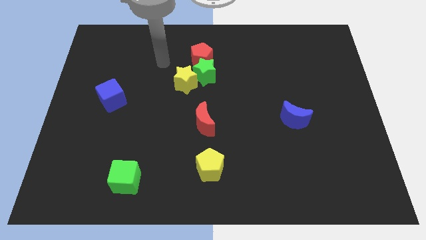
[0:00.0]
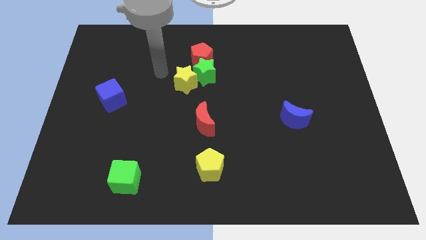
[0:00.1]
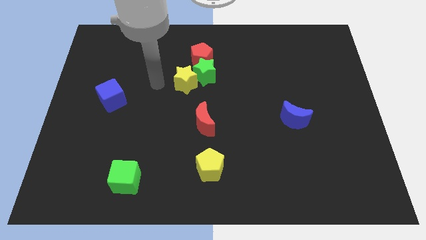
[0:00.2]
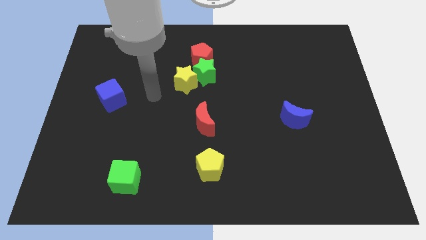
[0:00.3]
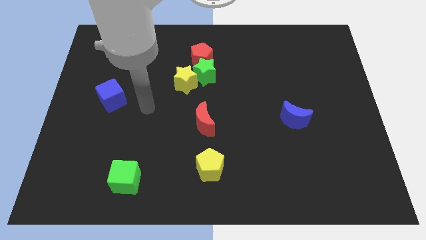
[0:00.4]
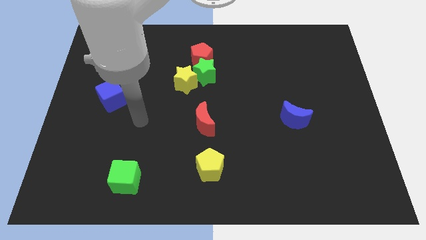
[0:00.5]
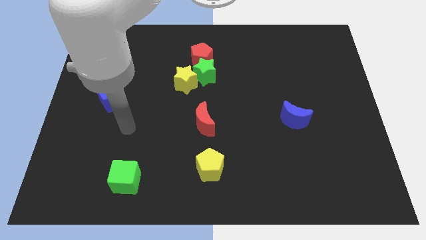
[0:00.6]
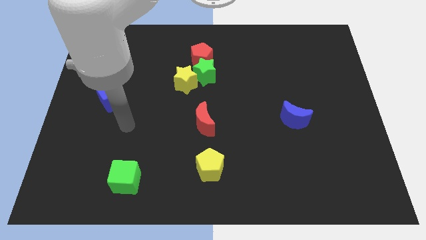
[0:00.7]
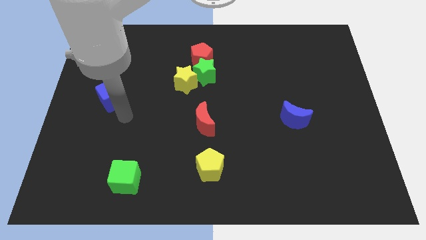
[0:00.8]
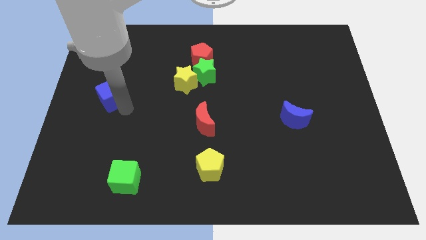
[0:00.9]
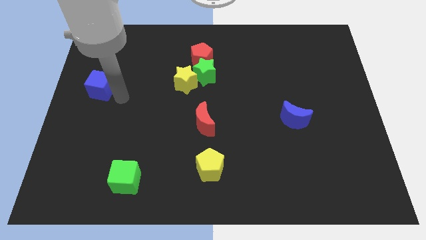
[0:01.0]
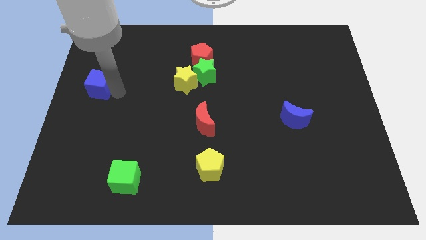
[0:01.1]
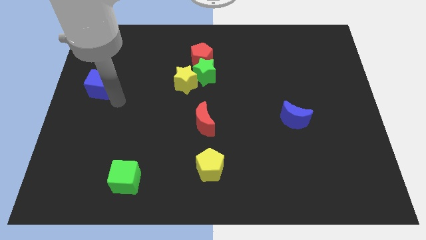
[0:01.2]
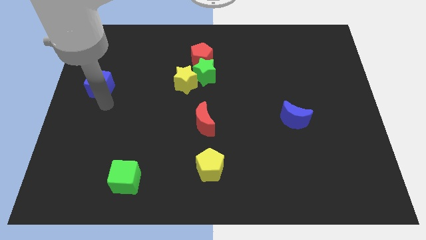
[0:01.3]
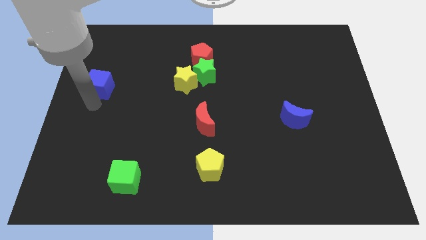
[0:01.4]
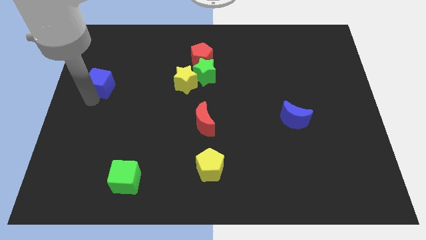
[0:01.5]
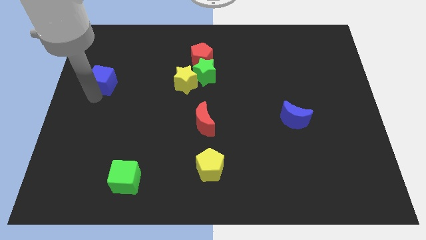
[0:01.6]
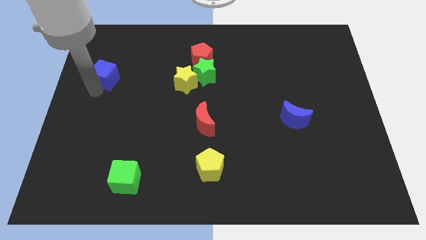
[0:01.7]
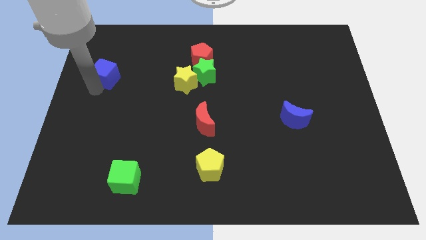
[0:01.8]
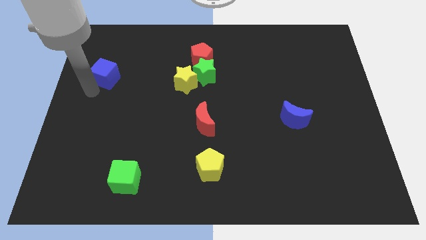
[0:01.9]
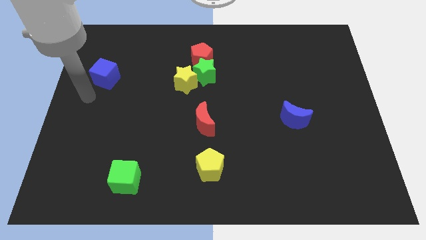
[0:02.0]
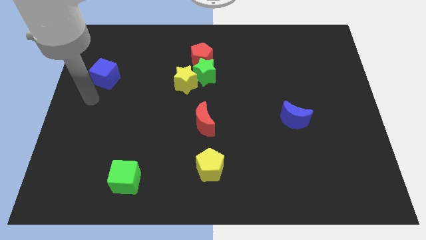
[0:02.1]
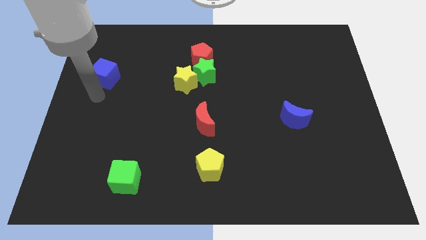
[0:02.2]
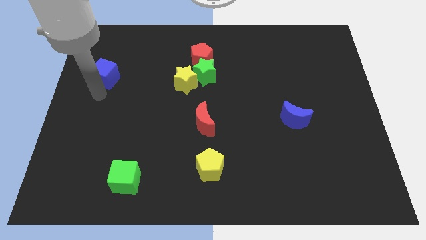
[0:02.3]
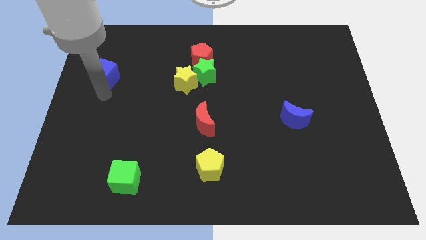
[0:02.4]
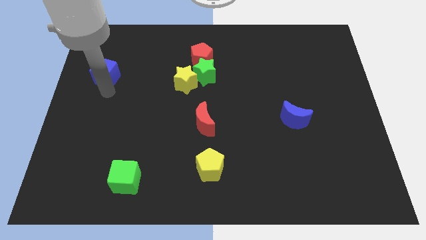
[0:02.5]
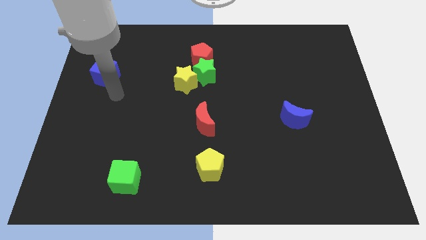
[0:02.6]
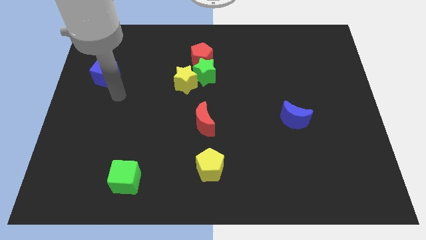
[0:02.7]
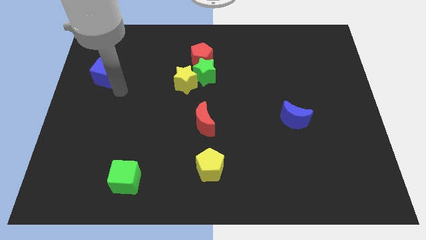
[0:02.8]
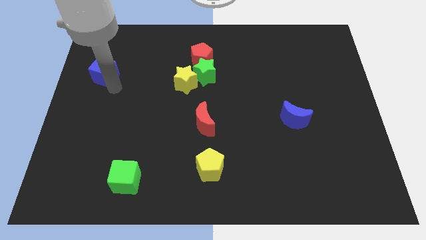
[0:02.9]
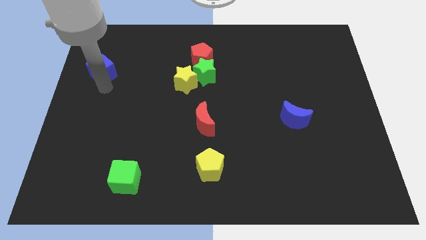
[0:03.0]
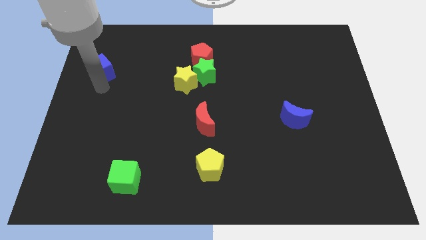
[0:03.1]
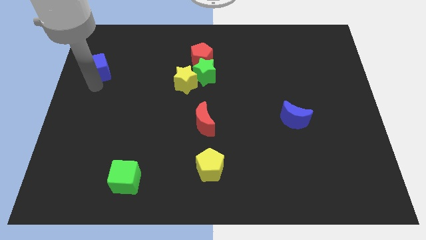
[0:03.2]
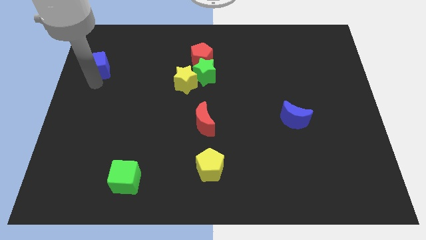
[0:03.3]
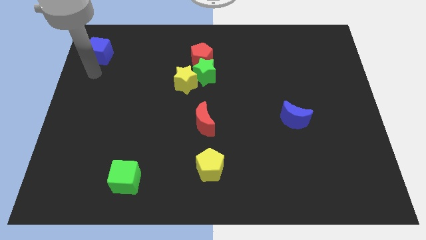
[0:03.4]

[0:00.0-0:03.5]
place the blue cube to the left of the red pentagon

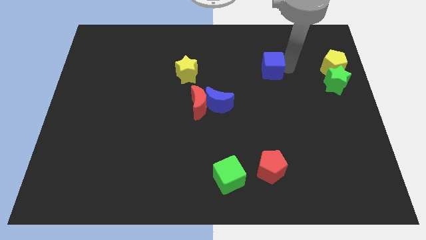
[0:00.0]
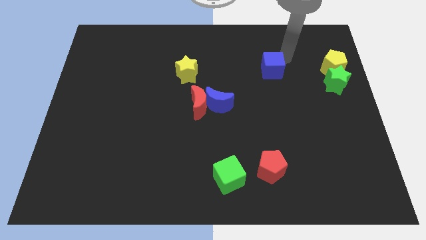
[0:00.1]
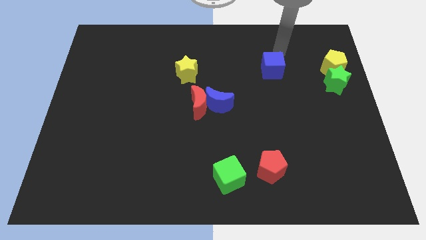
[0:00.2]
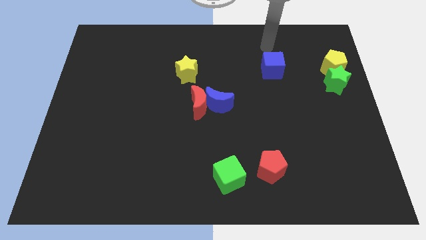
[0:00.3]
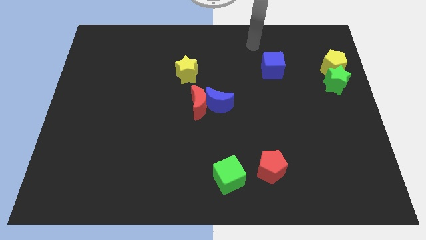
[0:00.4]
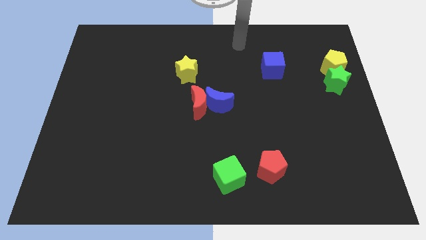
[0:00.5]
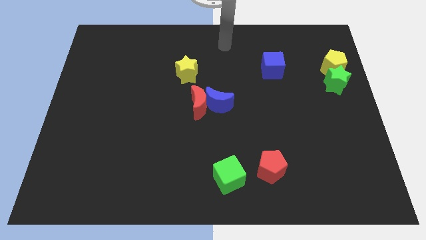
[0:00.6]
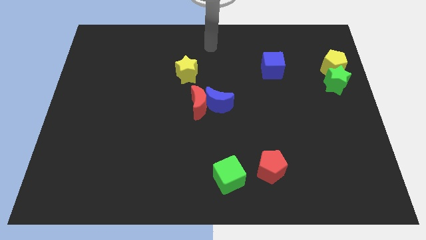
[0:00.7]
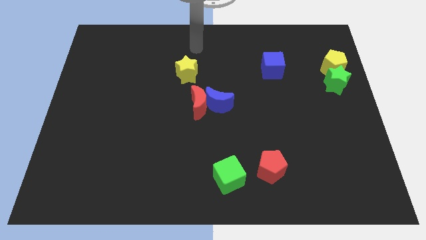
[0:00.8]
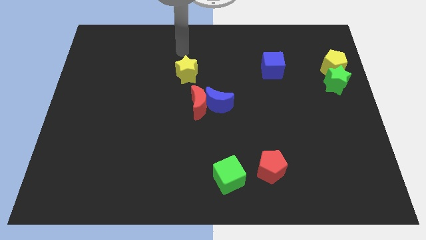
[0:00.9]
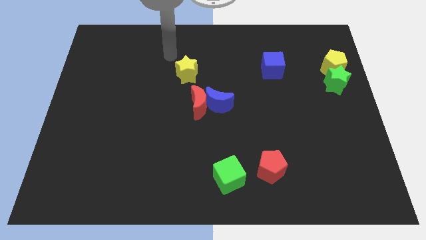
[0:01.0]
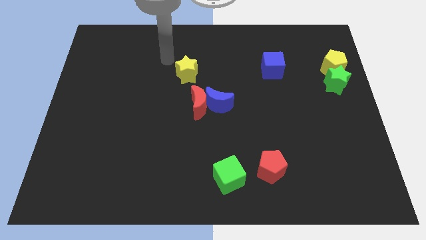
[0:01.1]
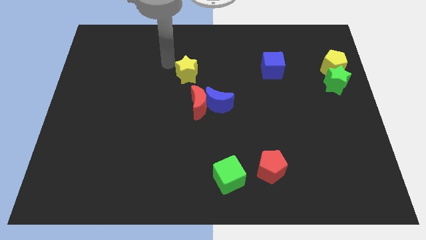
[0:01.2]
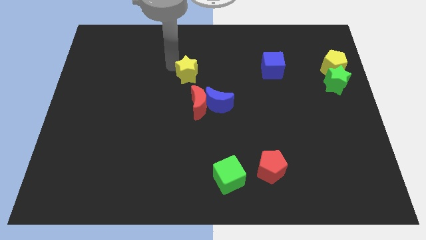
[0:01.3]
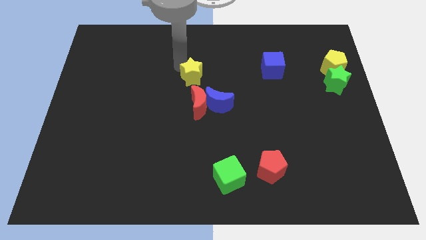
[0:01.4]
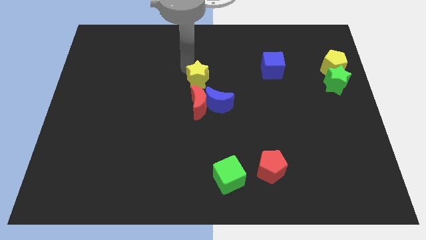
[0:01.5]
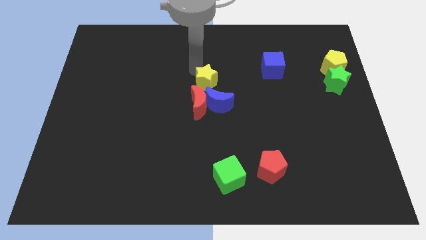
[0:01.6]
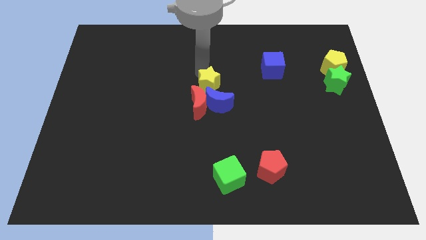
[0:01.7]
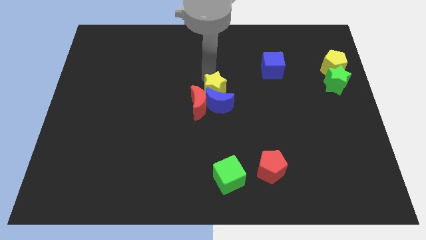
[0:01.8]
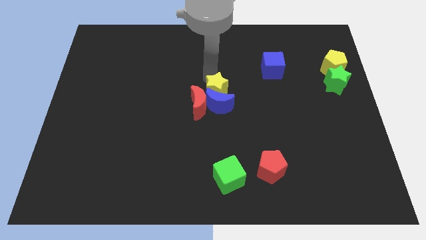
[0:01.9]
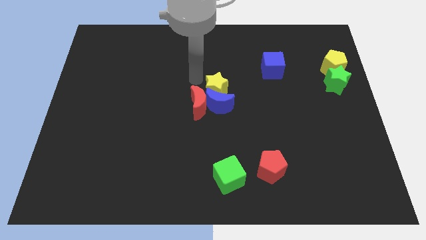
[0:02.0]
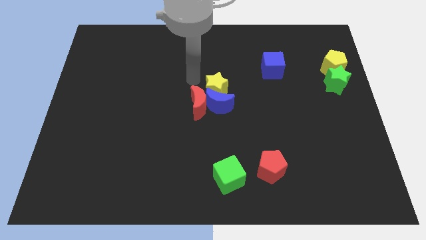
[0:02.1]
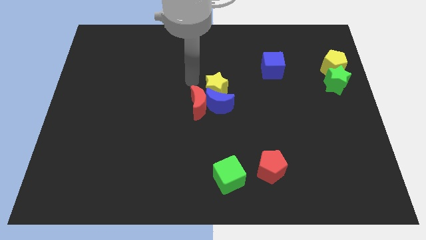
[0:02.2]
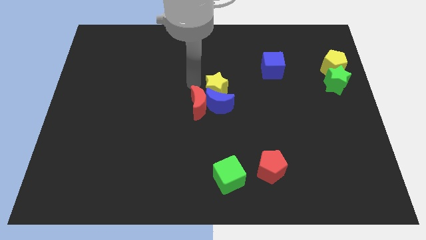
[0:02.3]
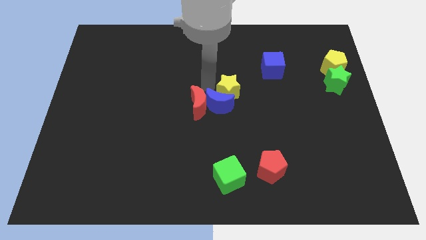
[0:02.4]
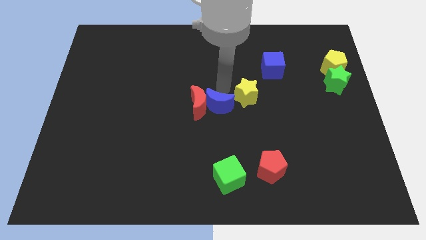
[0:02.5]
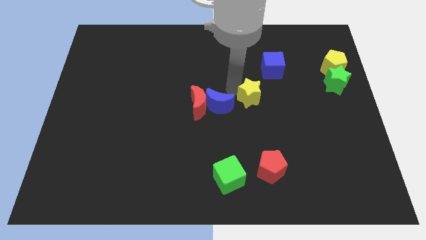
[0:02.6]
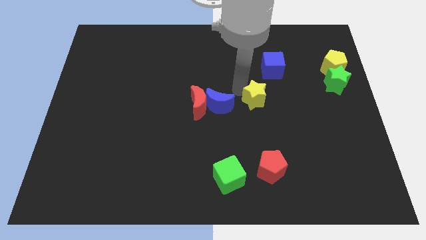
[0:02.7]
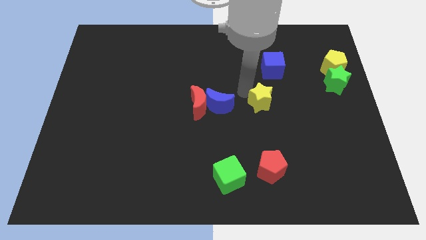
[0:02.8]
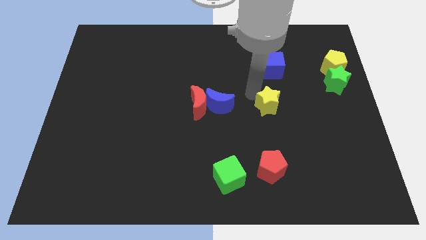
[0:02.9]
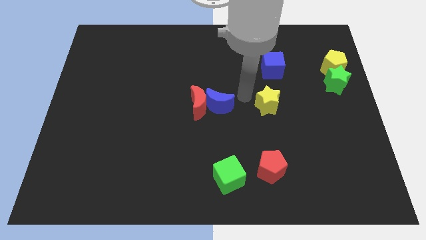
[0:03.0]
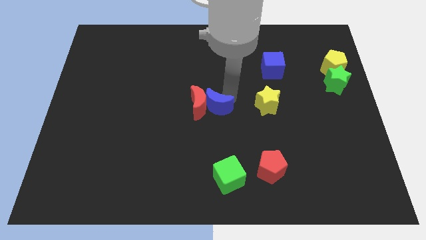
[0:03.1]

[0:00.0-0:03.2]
move the yellow star at the bottom side of the blue cube

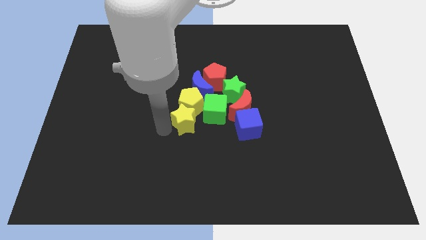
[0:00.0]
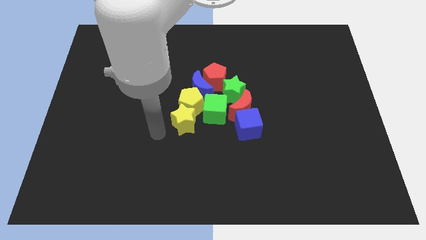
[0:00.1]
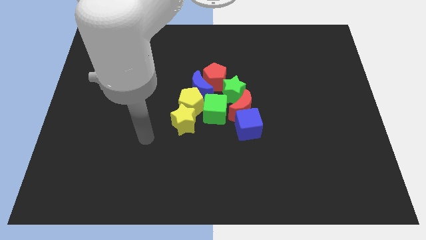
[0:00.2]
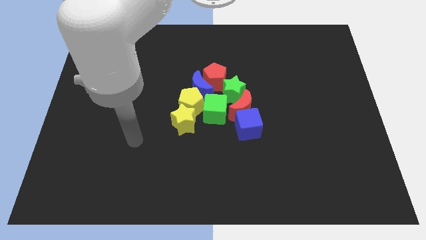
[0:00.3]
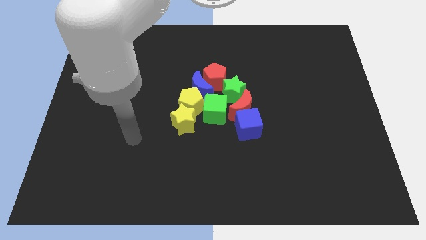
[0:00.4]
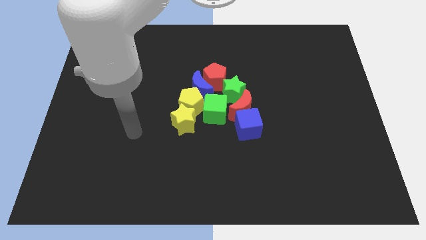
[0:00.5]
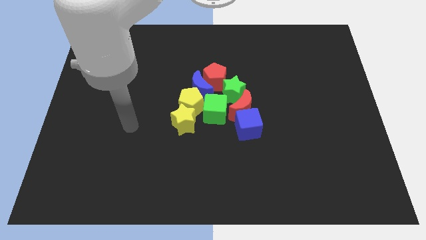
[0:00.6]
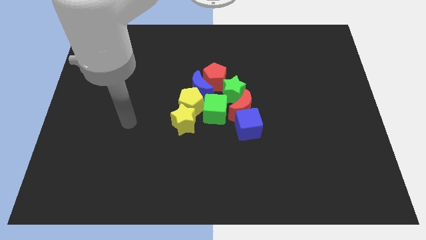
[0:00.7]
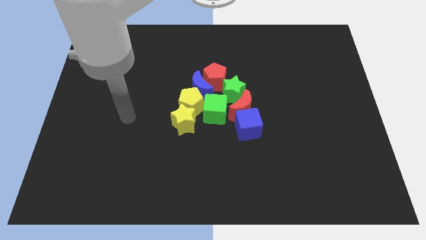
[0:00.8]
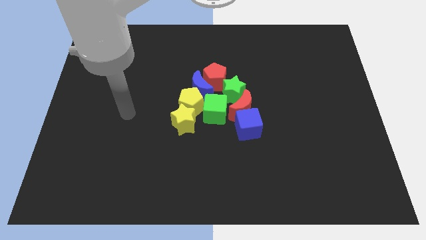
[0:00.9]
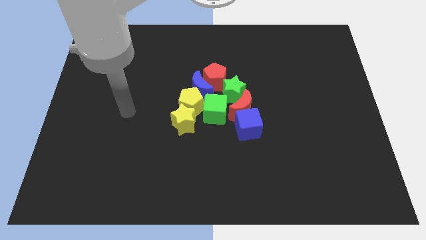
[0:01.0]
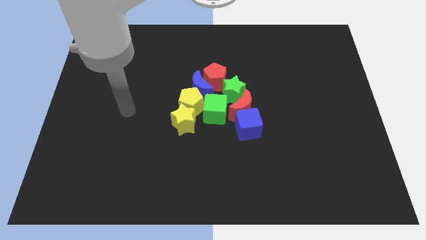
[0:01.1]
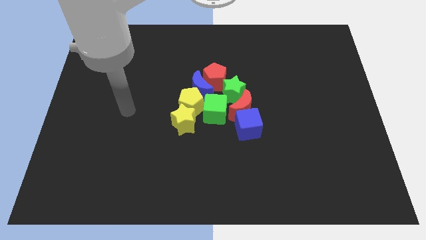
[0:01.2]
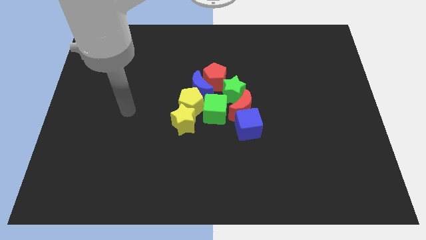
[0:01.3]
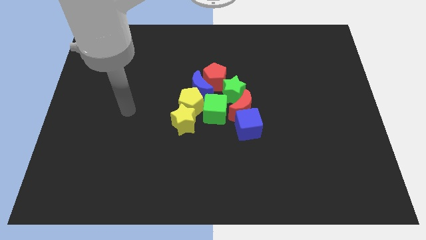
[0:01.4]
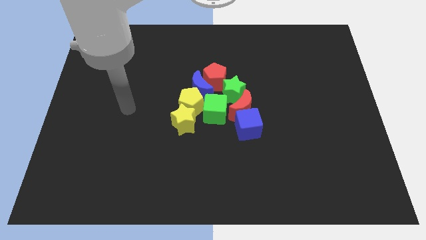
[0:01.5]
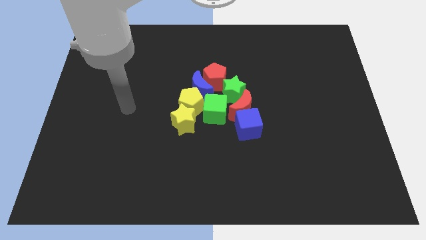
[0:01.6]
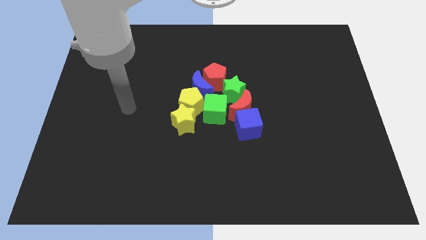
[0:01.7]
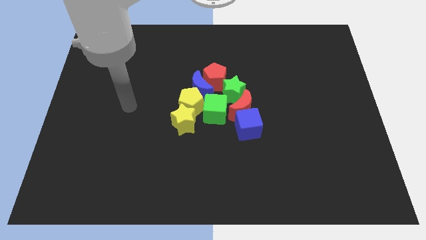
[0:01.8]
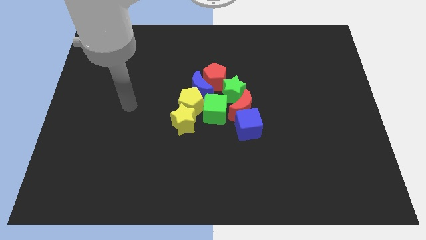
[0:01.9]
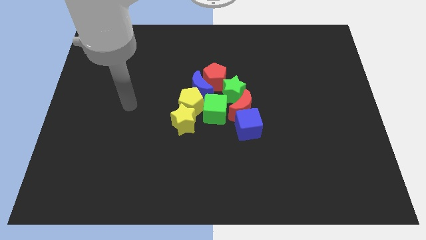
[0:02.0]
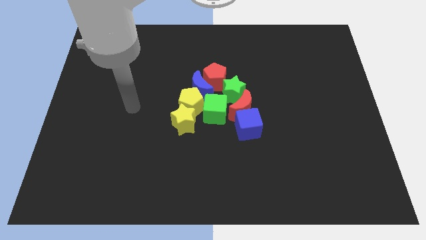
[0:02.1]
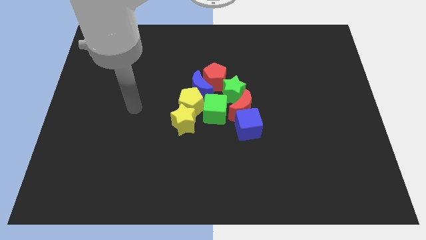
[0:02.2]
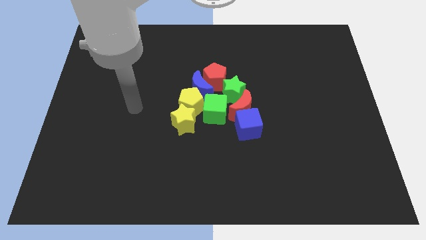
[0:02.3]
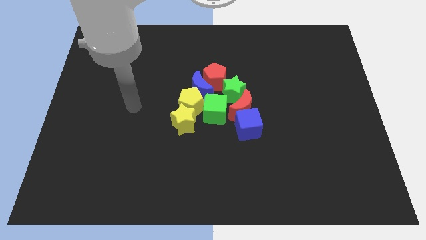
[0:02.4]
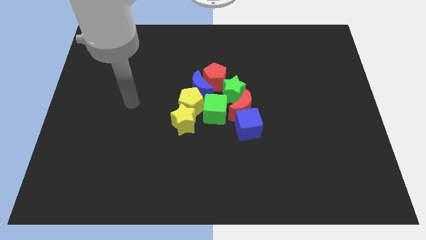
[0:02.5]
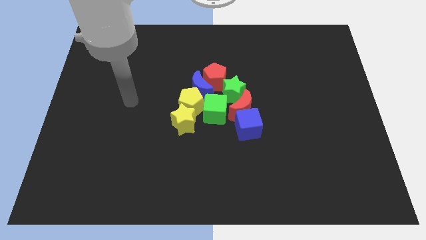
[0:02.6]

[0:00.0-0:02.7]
place your hand horizontally at left side of the yellow pentagon
